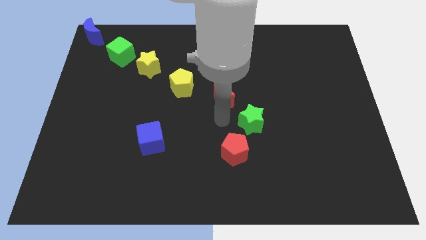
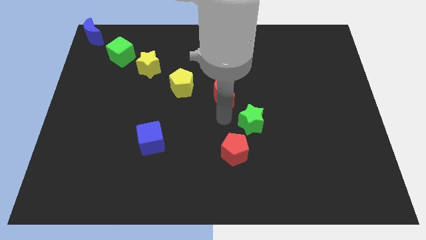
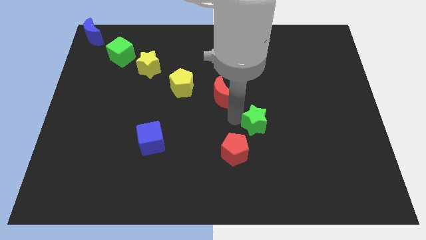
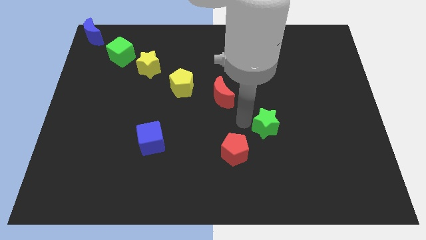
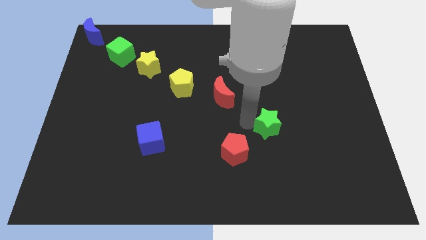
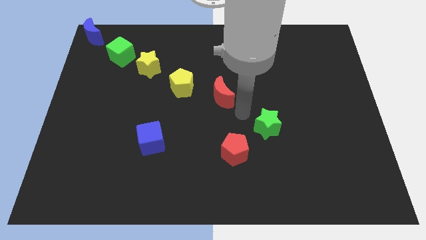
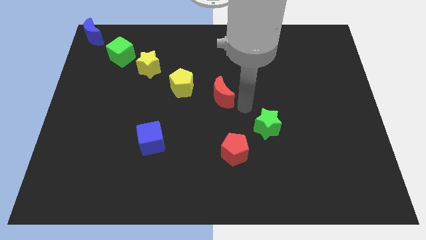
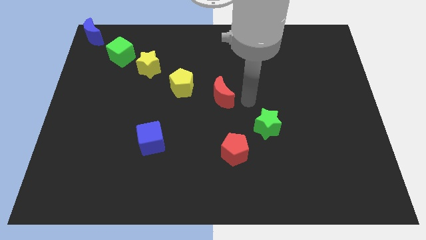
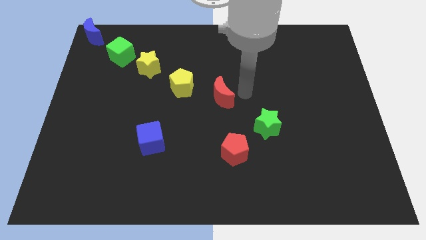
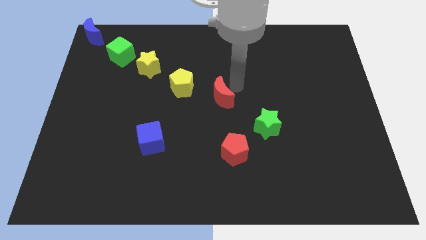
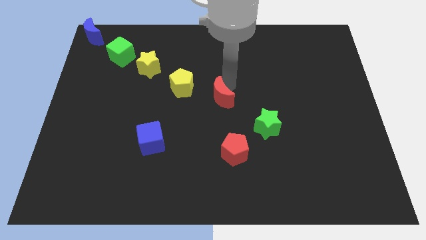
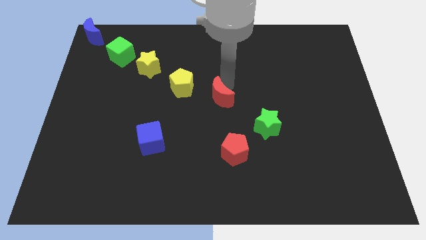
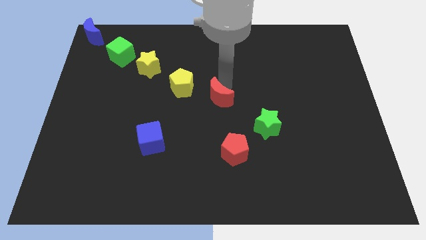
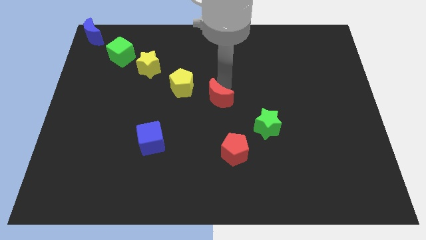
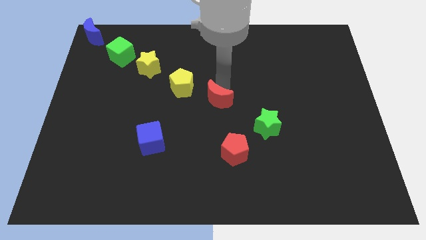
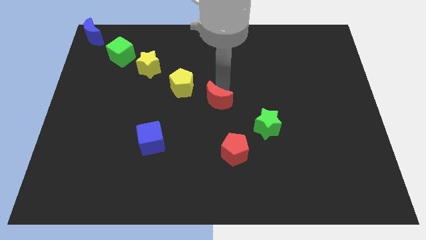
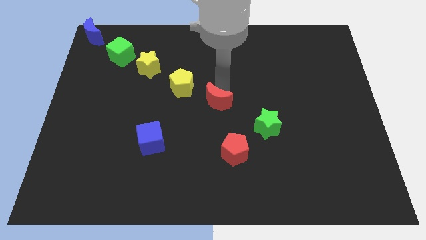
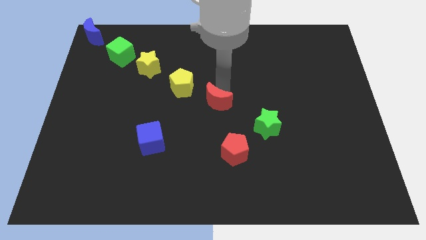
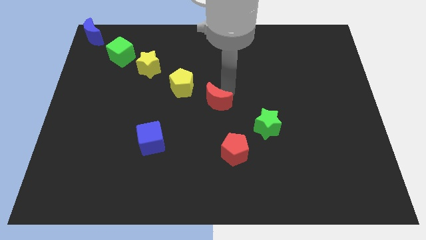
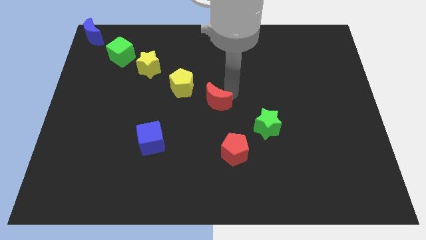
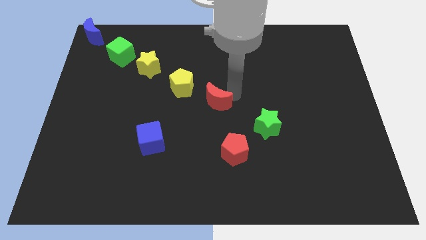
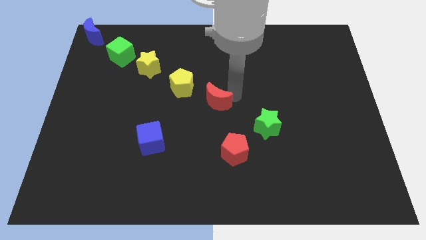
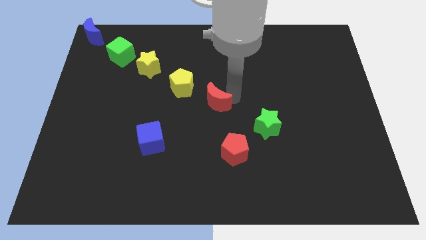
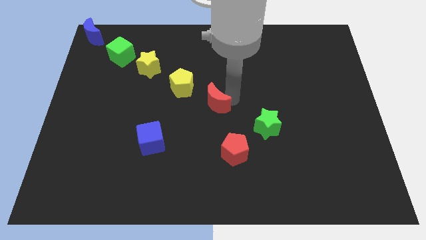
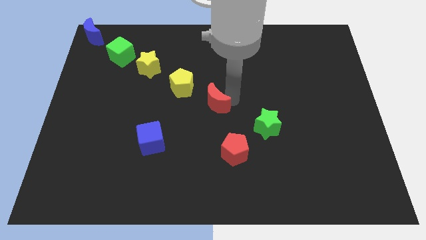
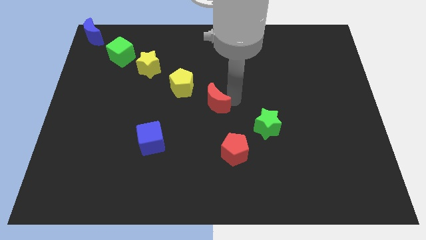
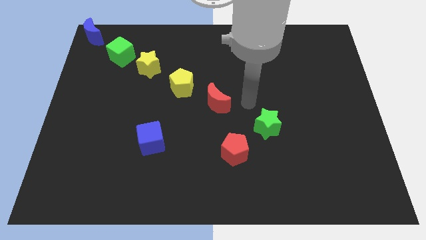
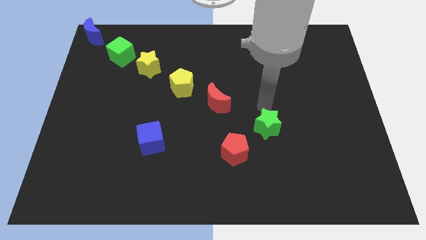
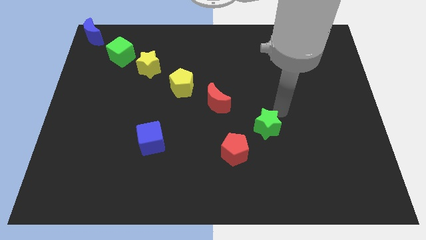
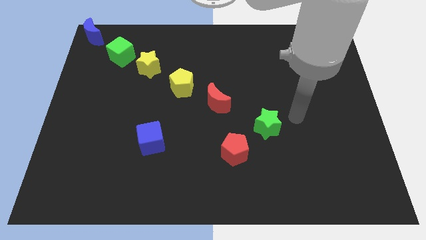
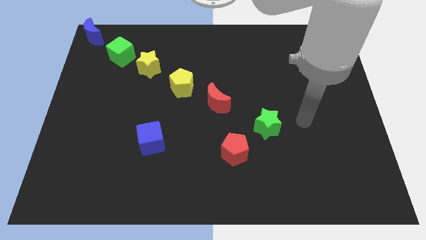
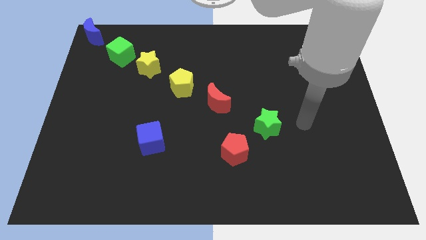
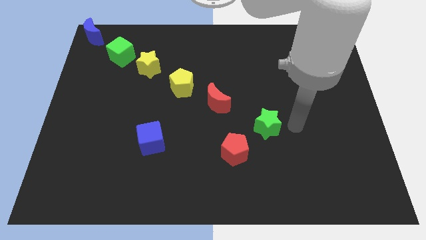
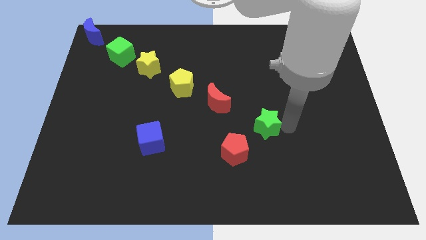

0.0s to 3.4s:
place the green star to the top side of the red pentagon

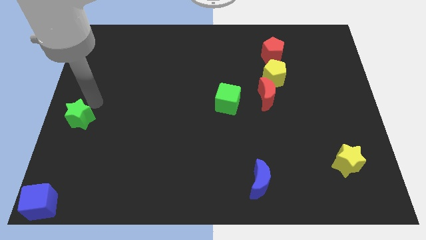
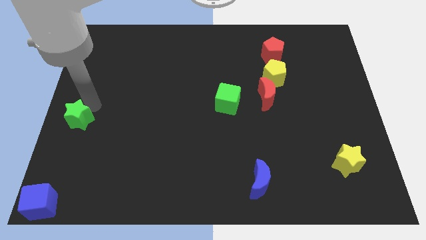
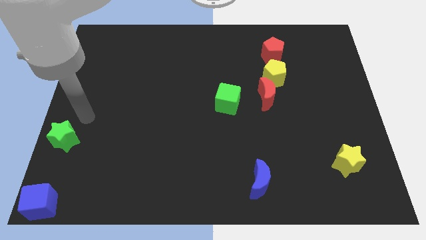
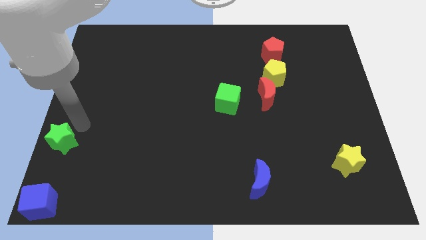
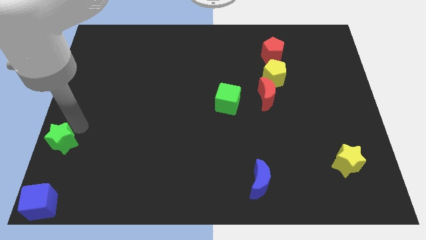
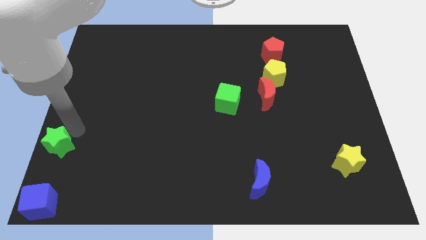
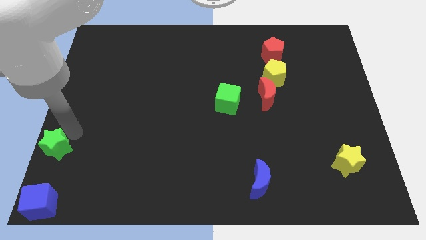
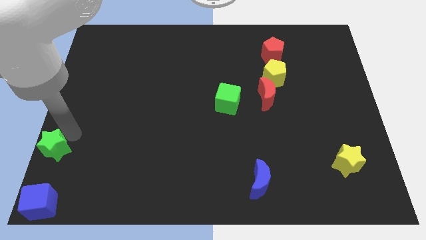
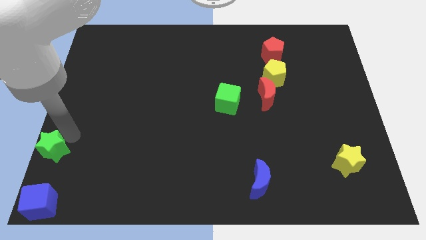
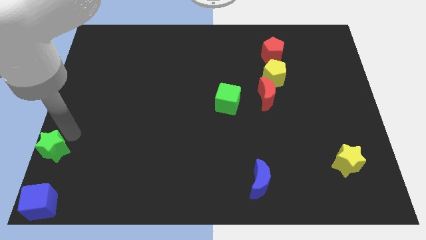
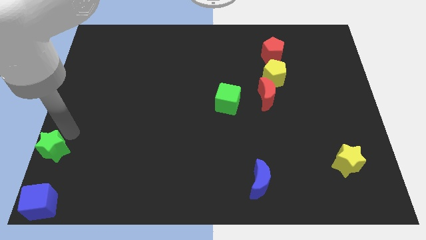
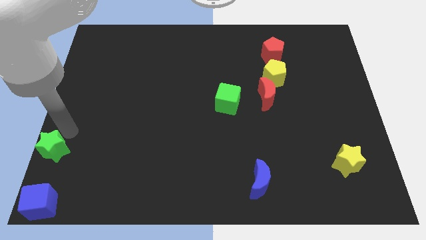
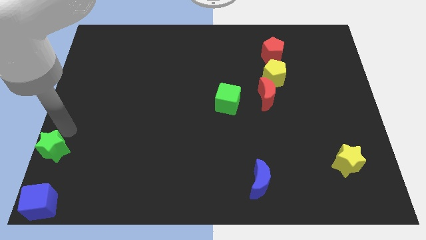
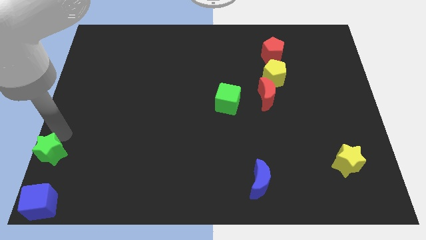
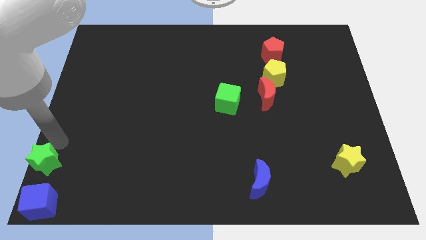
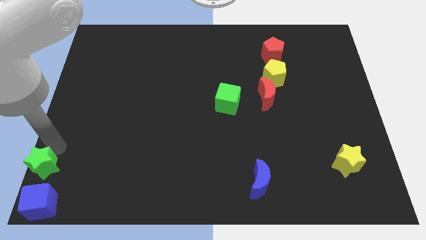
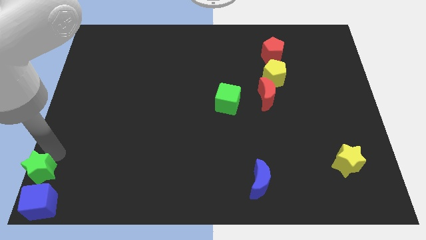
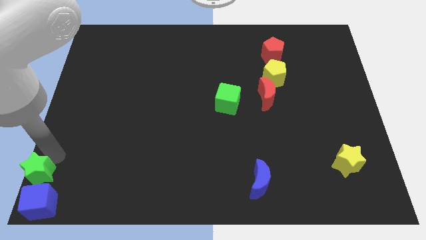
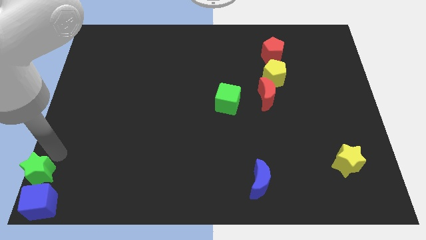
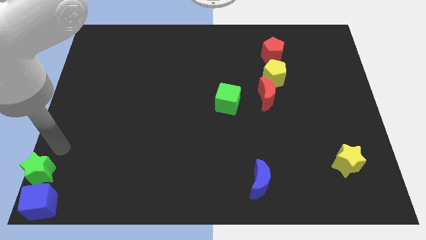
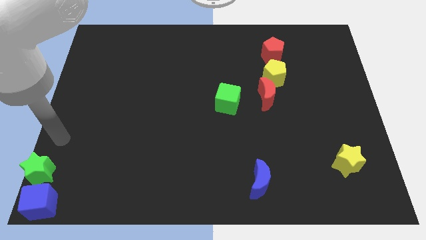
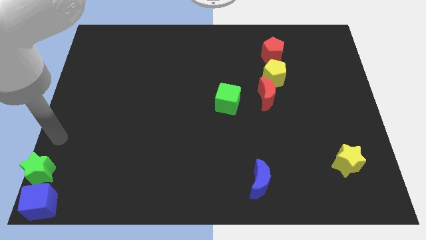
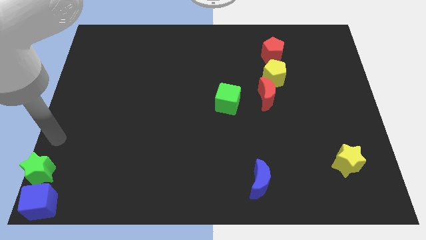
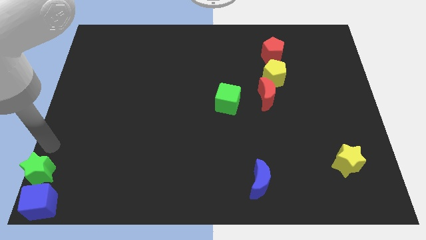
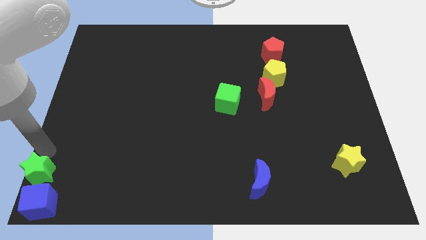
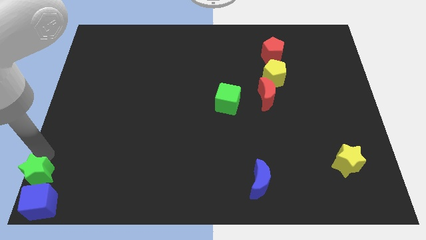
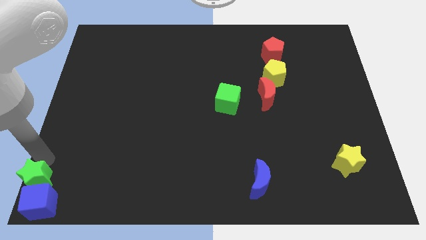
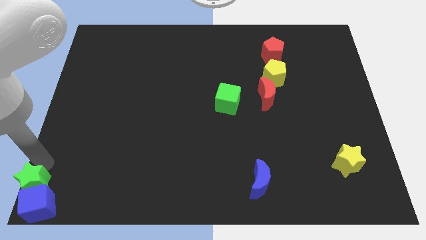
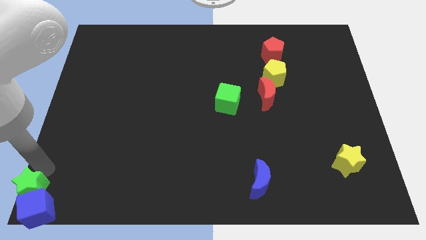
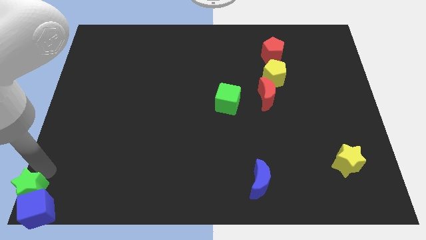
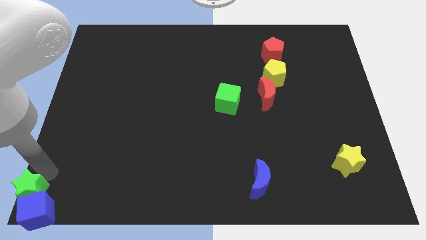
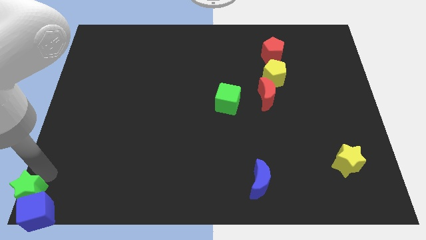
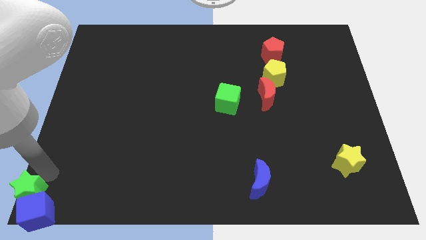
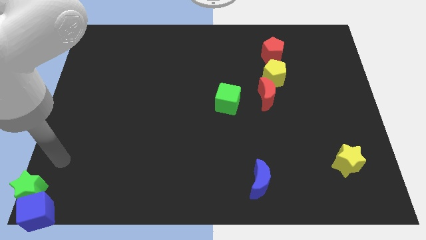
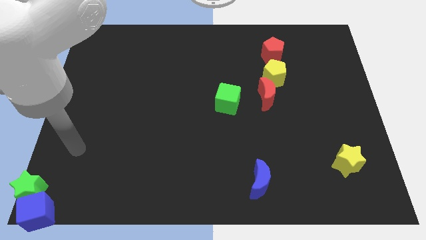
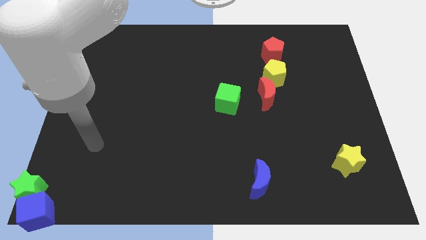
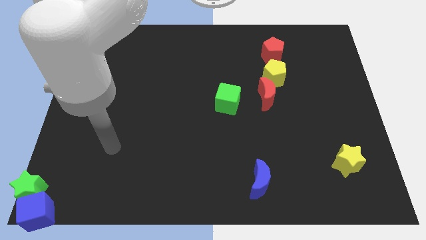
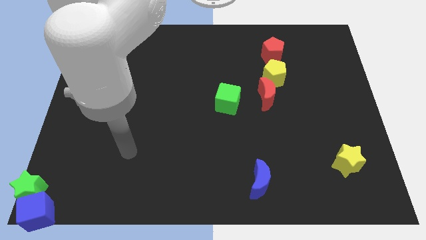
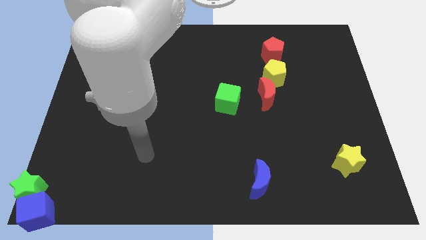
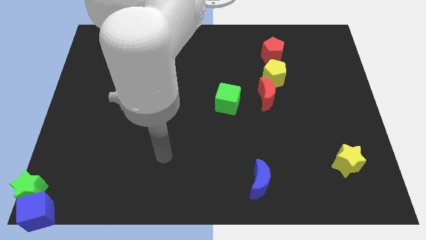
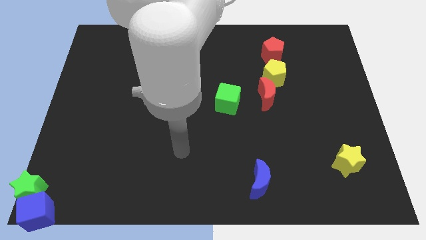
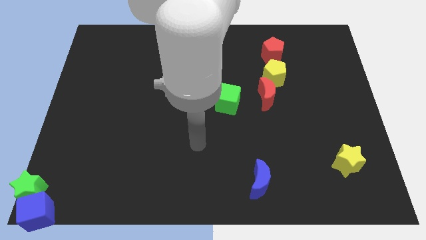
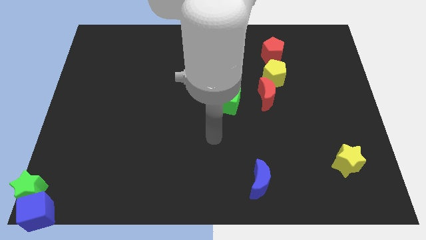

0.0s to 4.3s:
push the green star into blue cube

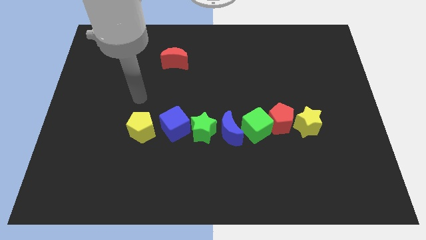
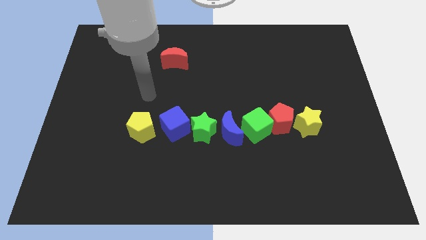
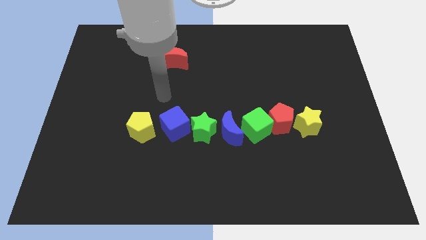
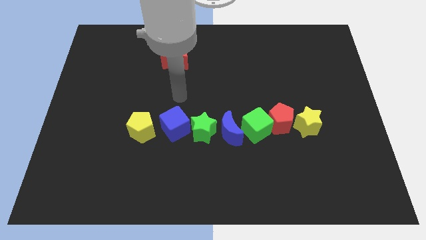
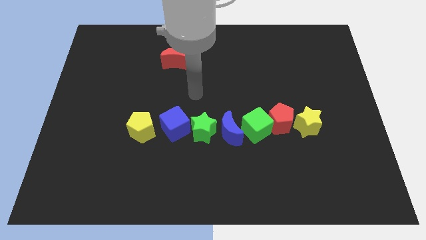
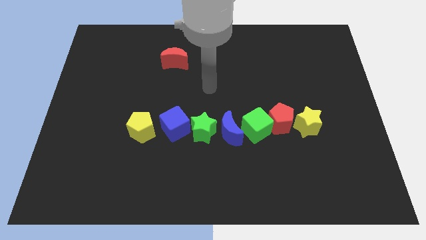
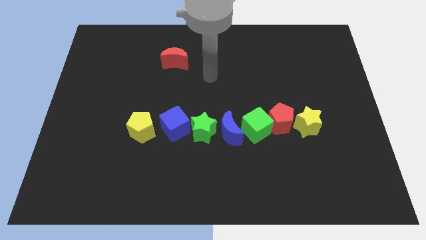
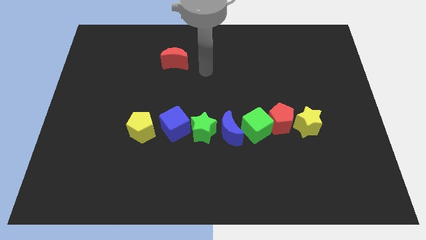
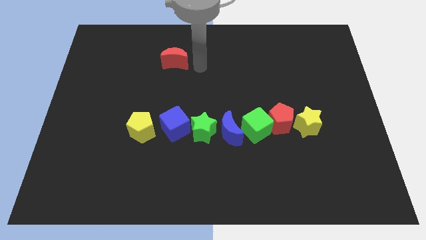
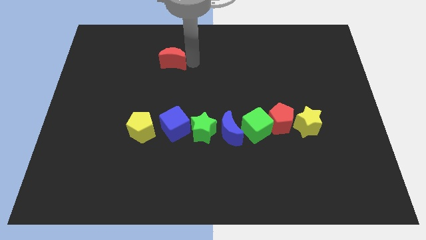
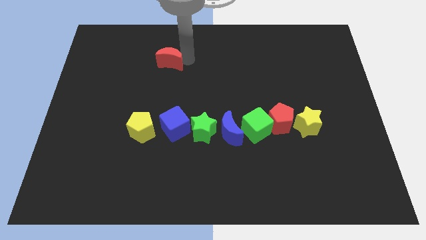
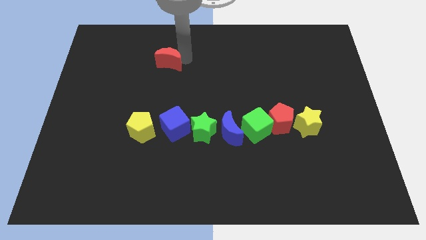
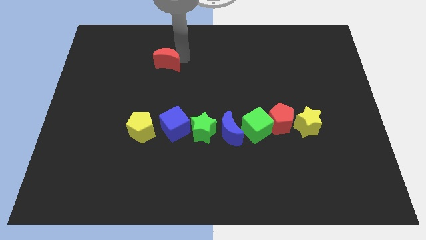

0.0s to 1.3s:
move the arm towards the red crescent to the top

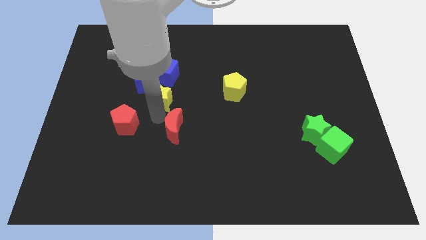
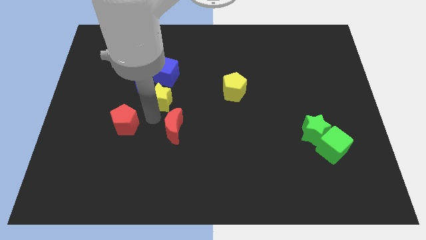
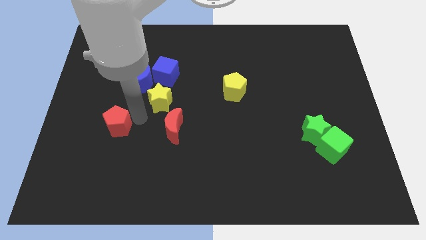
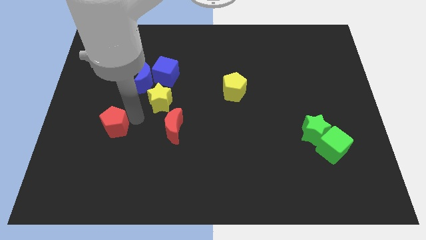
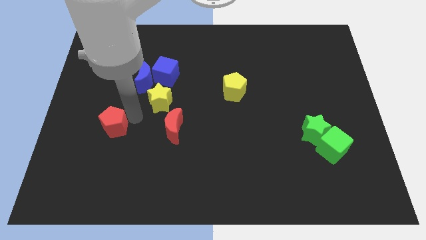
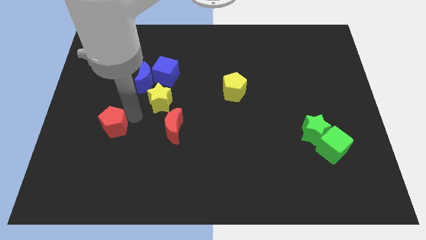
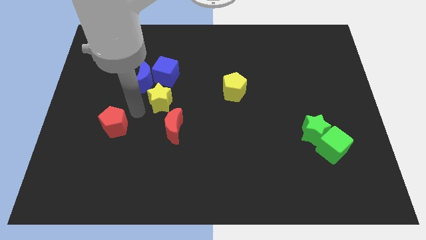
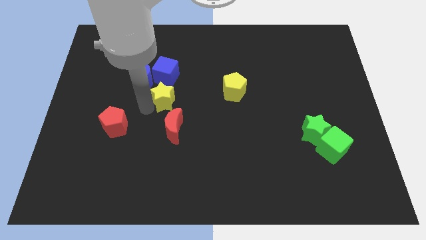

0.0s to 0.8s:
push the red pentagon slightly to the left
